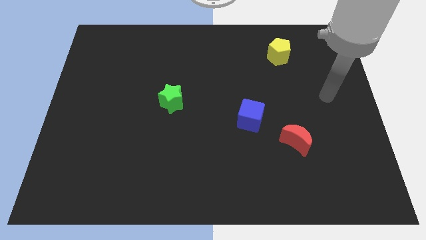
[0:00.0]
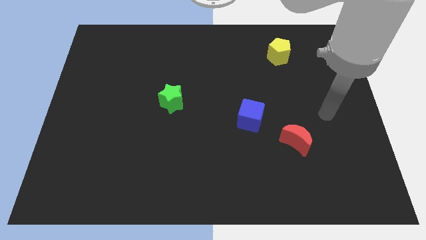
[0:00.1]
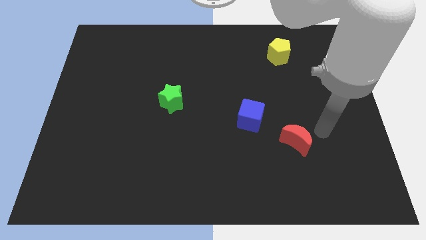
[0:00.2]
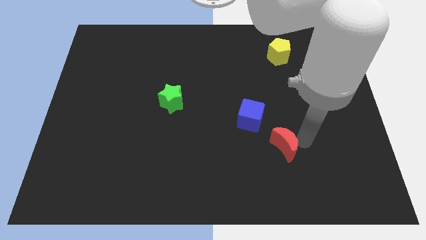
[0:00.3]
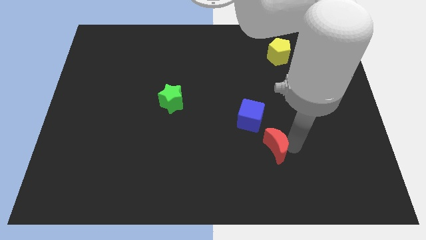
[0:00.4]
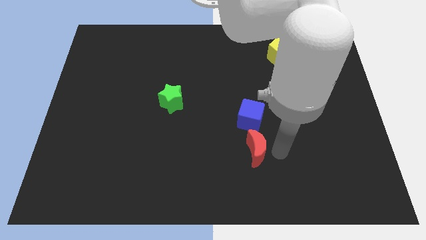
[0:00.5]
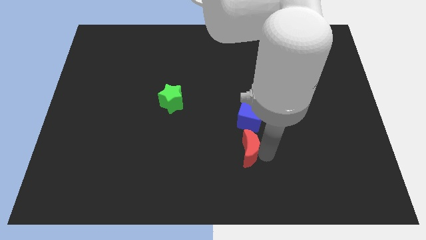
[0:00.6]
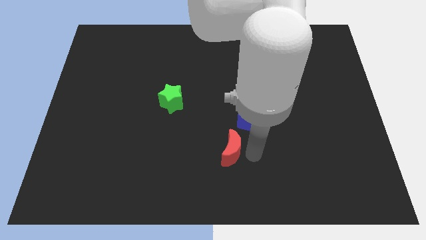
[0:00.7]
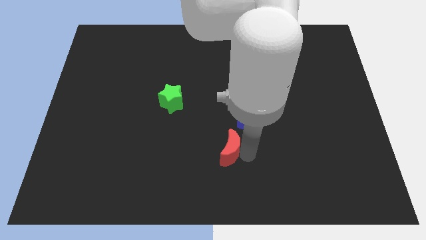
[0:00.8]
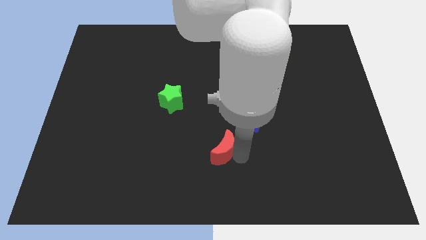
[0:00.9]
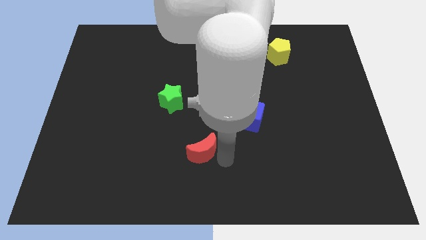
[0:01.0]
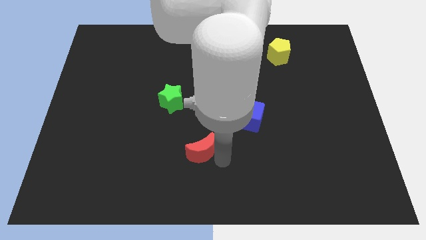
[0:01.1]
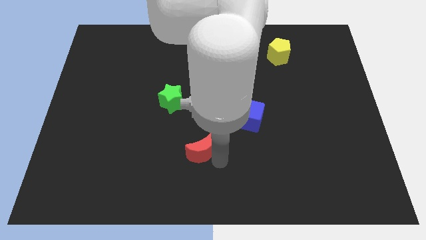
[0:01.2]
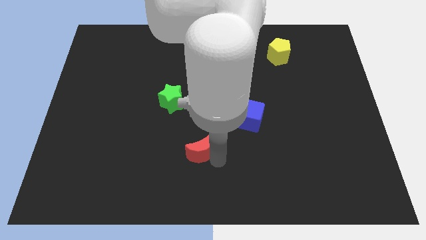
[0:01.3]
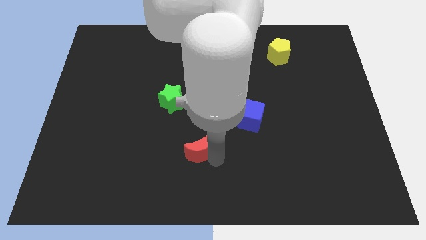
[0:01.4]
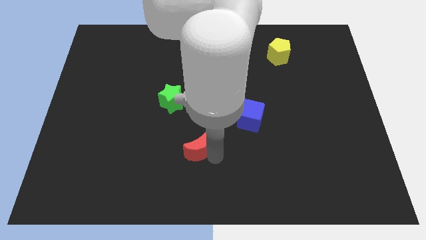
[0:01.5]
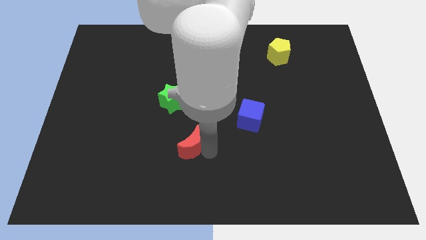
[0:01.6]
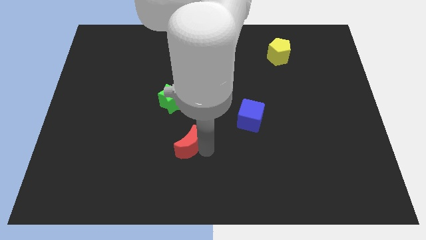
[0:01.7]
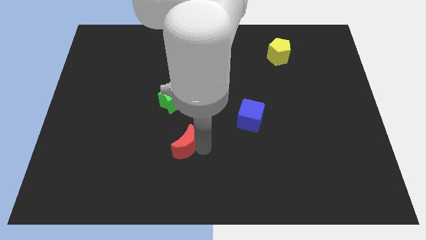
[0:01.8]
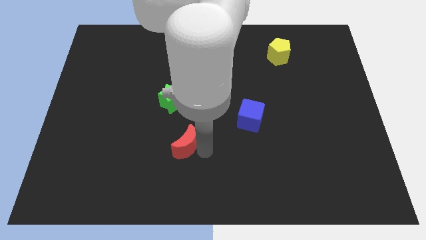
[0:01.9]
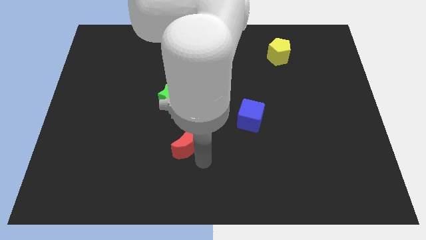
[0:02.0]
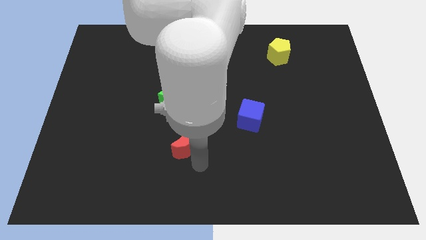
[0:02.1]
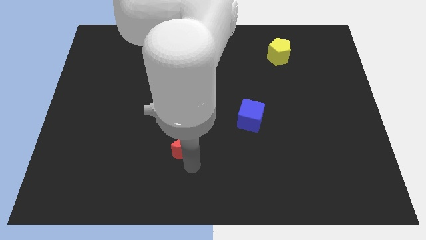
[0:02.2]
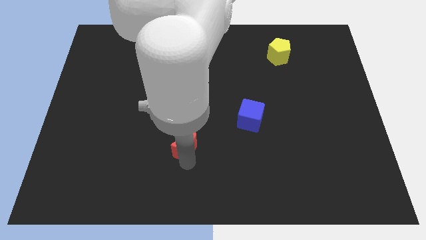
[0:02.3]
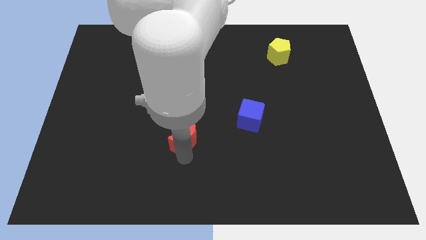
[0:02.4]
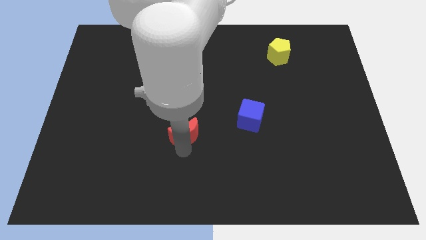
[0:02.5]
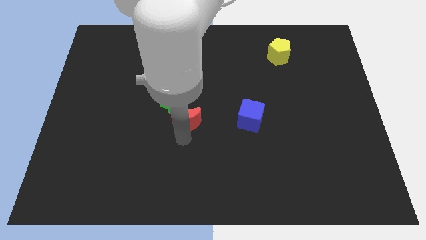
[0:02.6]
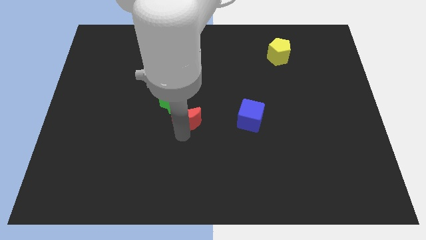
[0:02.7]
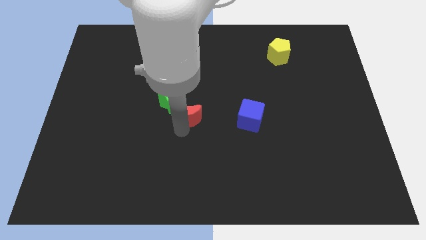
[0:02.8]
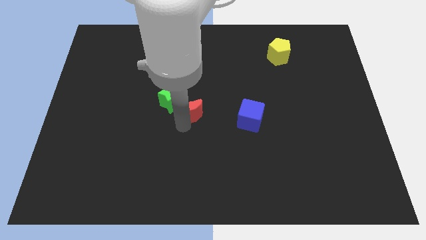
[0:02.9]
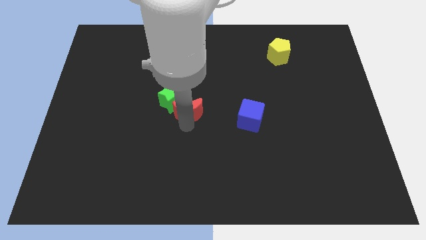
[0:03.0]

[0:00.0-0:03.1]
push the red block towards the green star

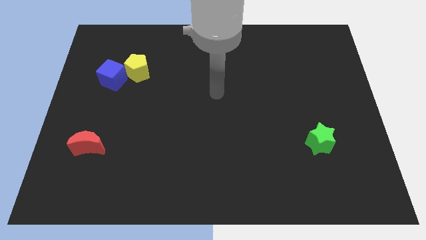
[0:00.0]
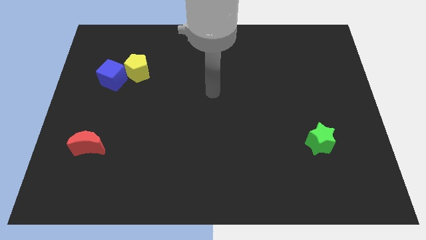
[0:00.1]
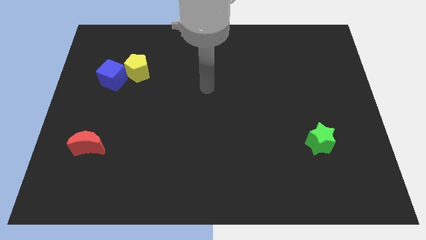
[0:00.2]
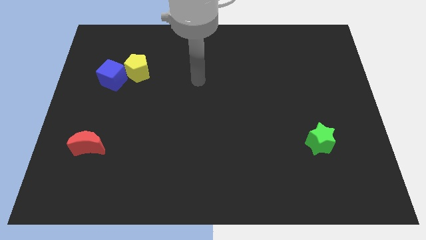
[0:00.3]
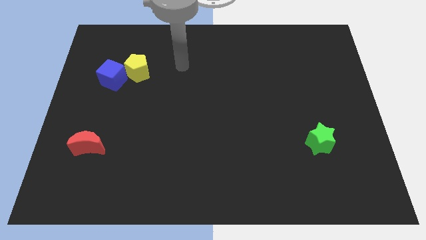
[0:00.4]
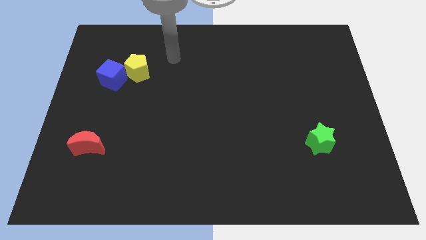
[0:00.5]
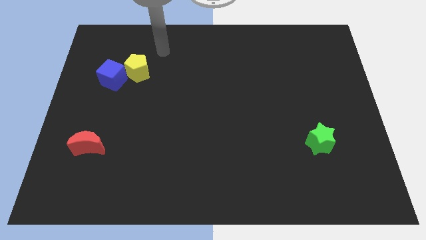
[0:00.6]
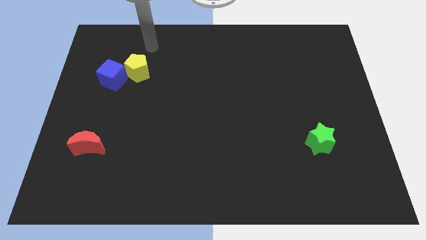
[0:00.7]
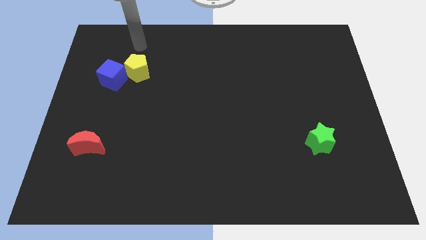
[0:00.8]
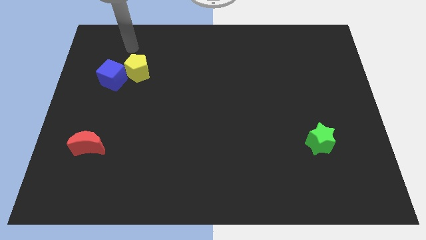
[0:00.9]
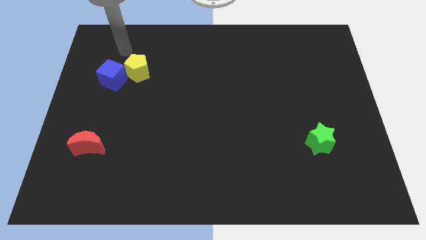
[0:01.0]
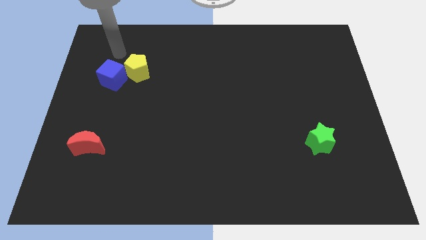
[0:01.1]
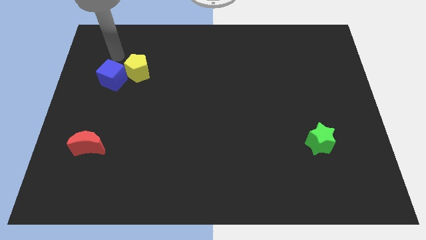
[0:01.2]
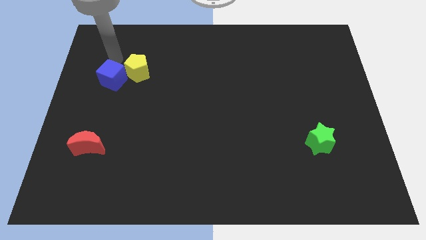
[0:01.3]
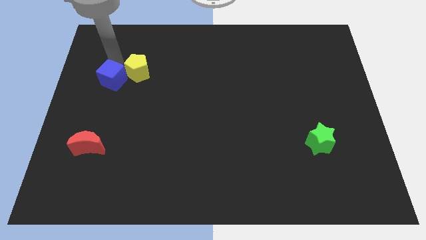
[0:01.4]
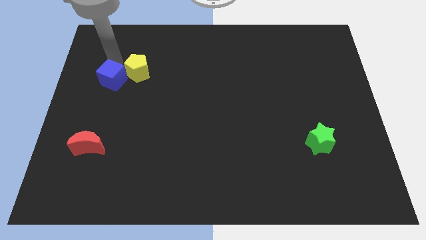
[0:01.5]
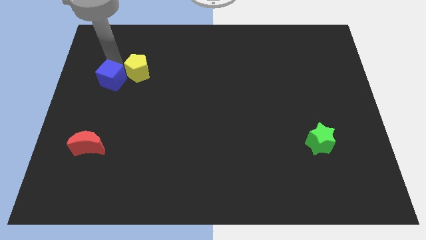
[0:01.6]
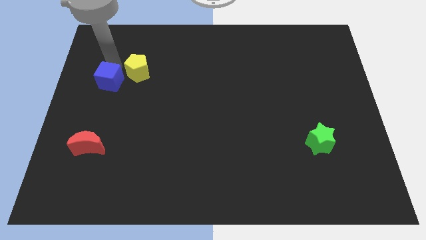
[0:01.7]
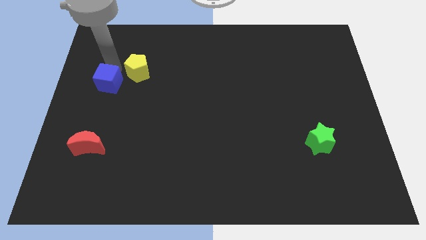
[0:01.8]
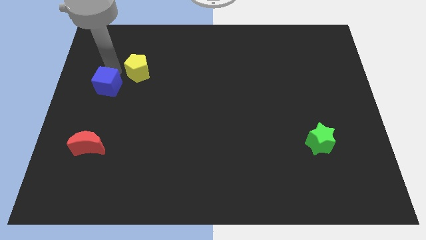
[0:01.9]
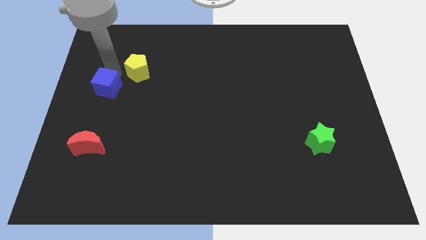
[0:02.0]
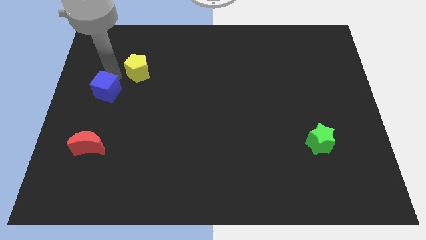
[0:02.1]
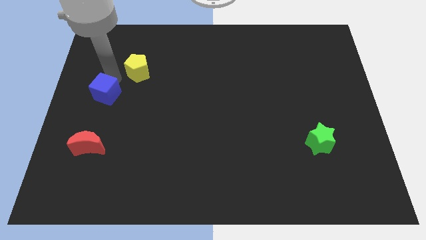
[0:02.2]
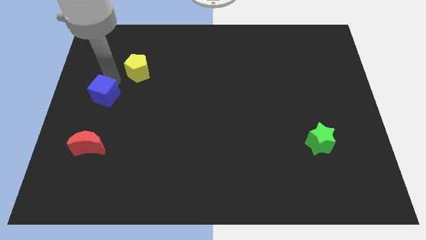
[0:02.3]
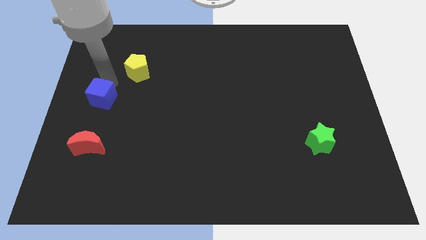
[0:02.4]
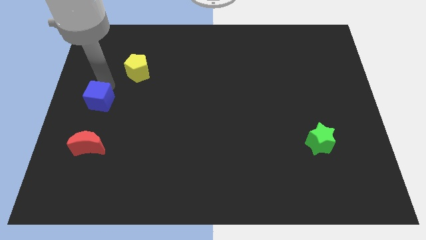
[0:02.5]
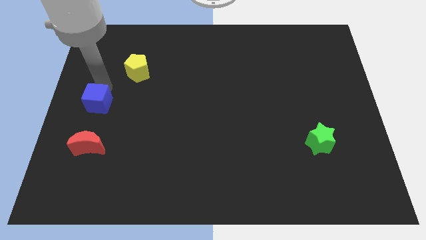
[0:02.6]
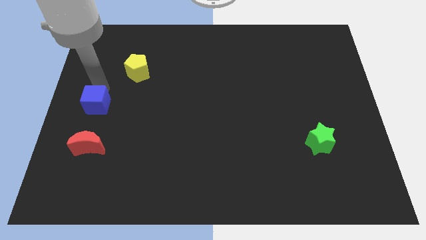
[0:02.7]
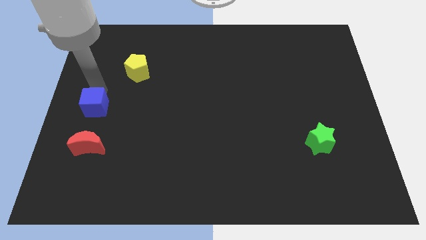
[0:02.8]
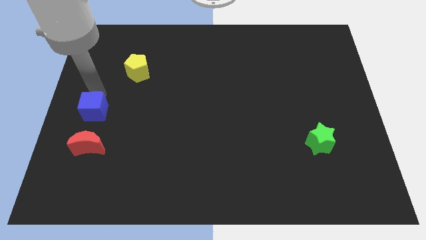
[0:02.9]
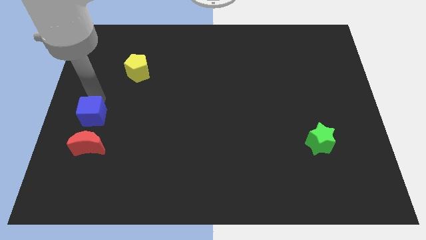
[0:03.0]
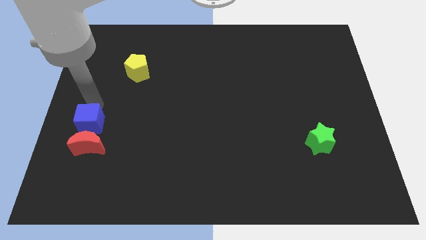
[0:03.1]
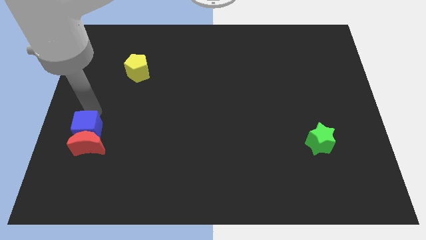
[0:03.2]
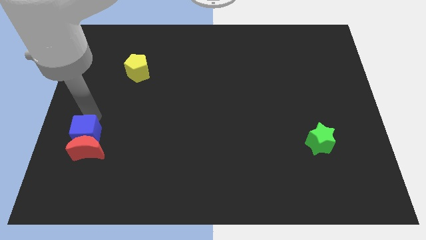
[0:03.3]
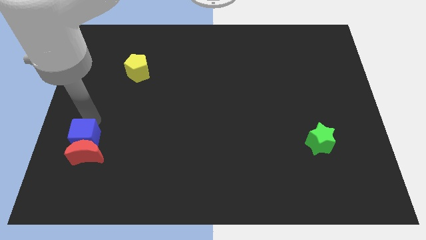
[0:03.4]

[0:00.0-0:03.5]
push the cube to the red block

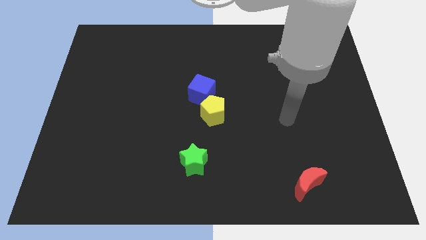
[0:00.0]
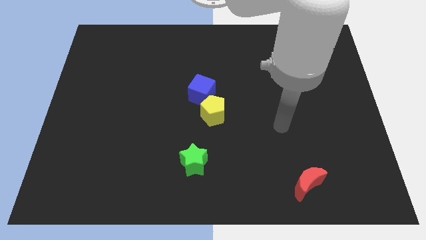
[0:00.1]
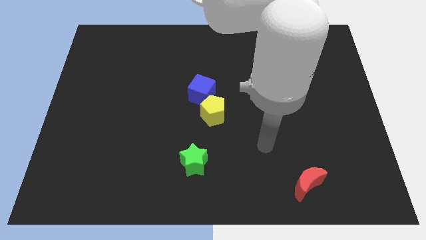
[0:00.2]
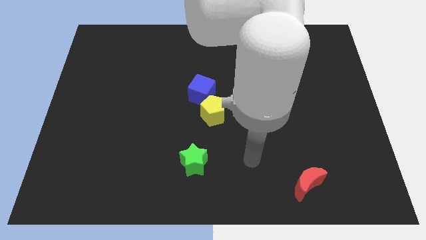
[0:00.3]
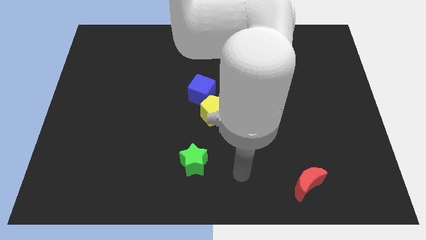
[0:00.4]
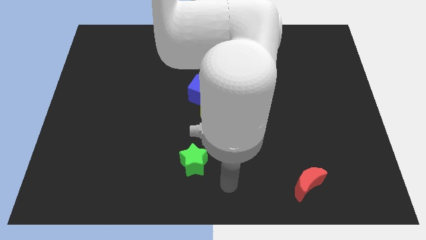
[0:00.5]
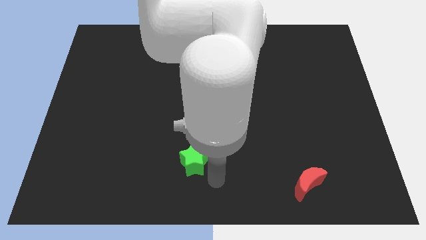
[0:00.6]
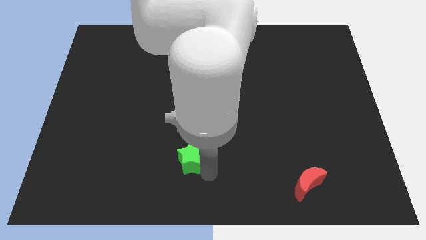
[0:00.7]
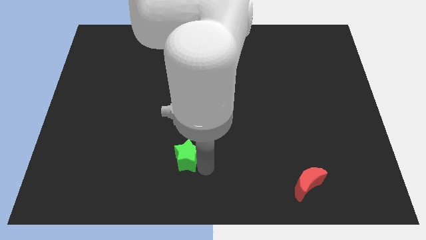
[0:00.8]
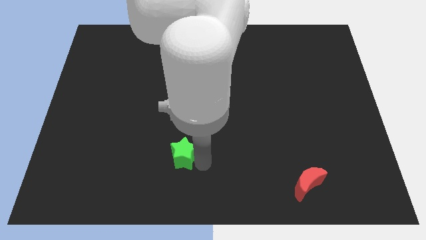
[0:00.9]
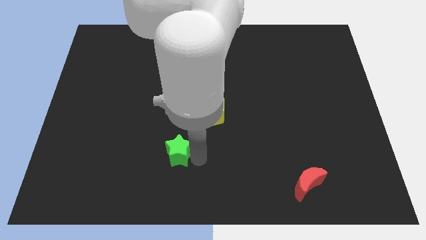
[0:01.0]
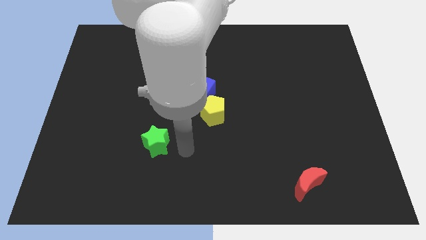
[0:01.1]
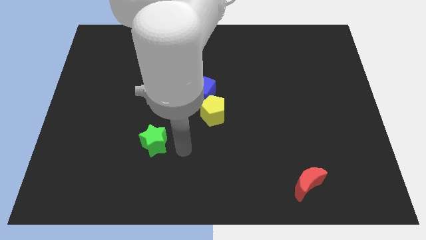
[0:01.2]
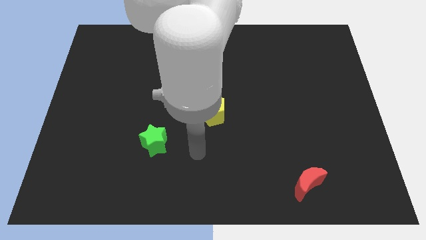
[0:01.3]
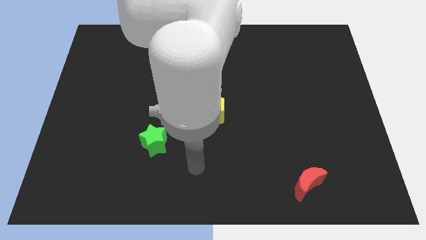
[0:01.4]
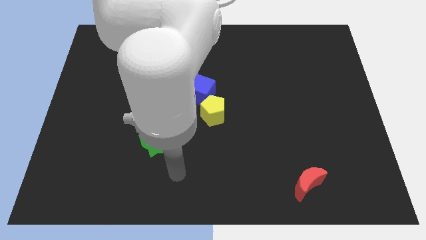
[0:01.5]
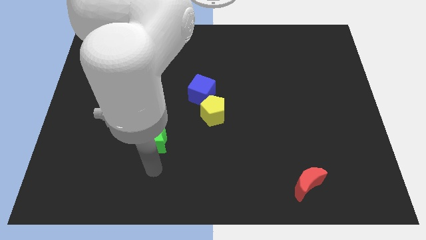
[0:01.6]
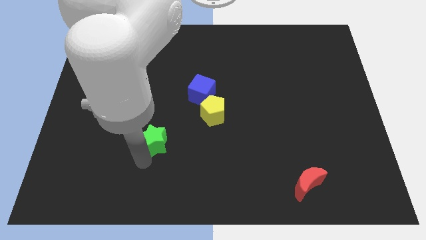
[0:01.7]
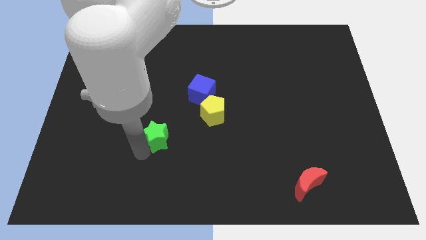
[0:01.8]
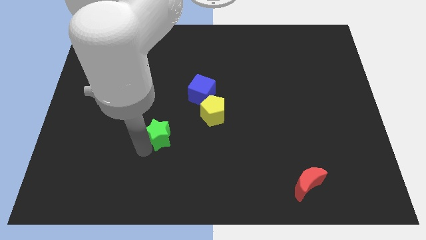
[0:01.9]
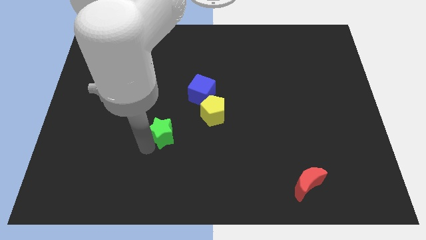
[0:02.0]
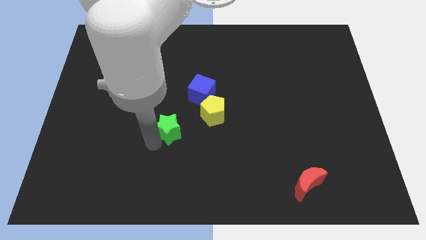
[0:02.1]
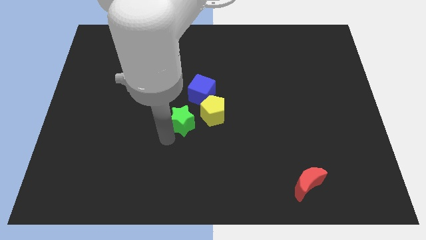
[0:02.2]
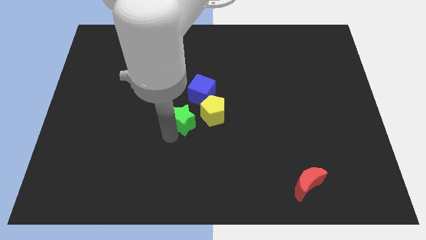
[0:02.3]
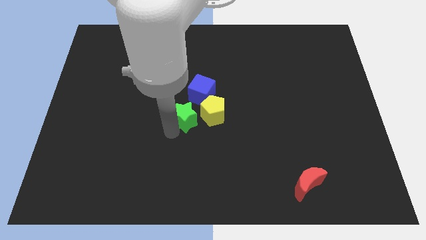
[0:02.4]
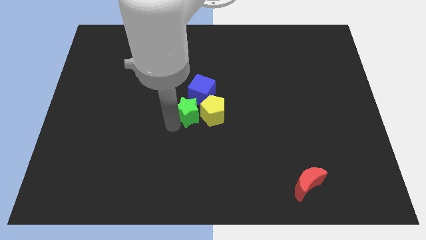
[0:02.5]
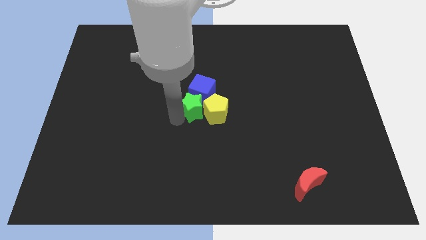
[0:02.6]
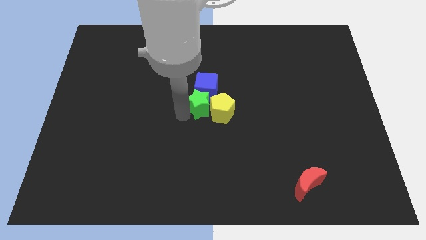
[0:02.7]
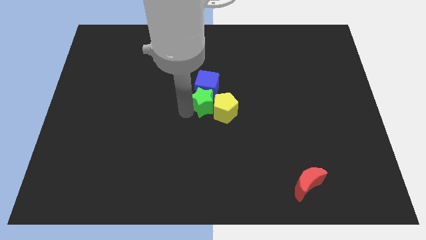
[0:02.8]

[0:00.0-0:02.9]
push the green block close to the blue block
